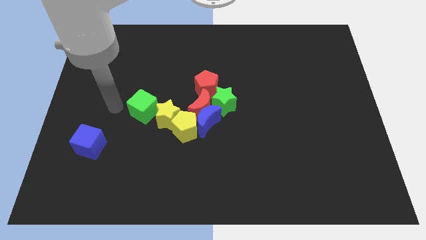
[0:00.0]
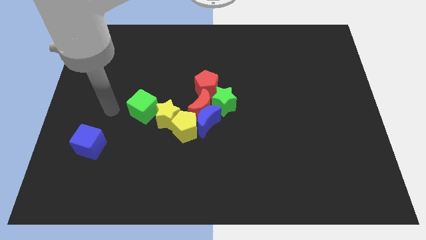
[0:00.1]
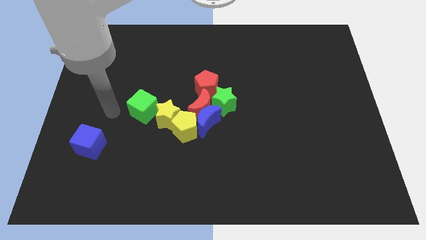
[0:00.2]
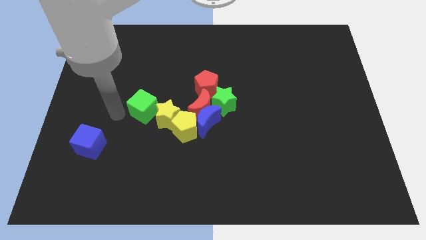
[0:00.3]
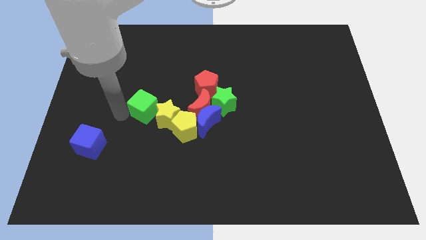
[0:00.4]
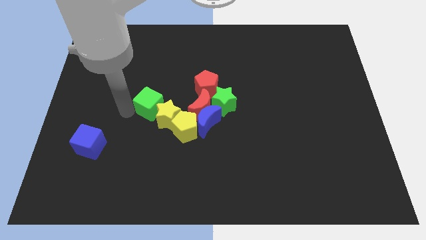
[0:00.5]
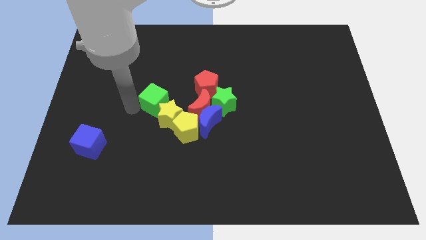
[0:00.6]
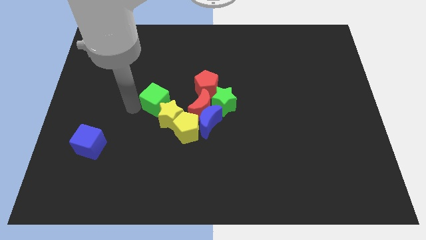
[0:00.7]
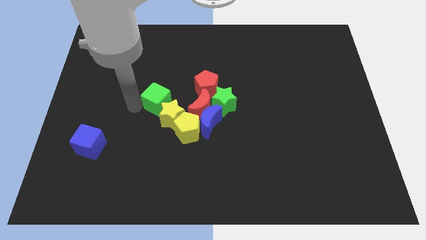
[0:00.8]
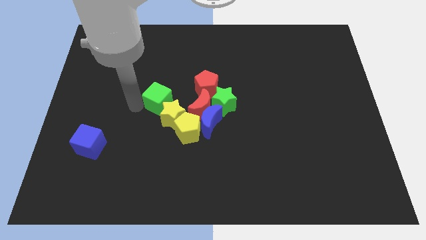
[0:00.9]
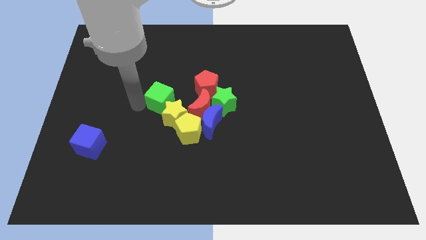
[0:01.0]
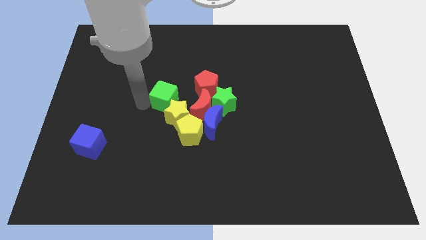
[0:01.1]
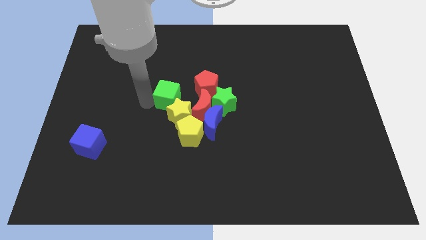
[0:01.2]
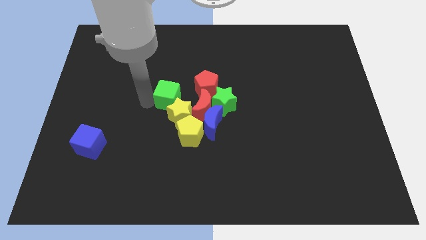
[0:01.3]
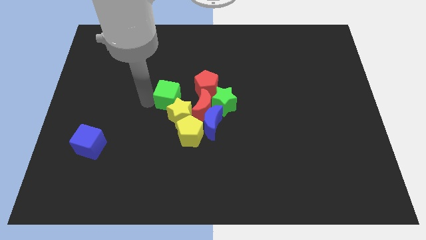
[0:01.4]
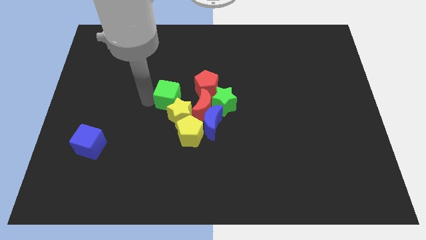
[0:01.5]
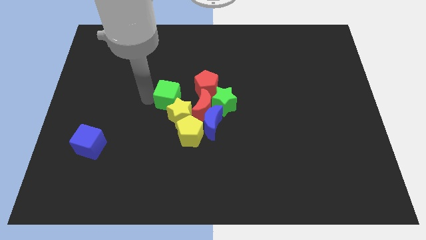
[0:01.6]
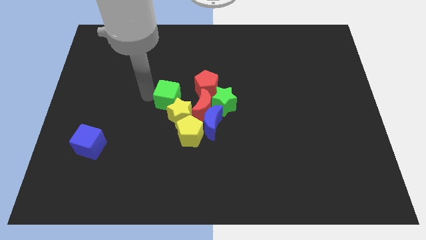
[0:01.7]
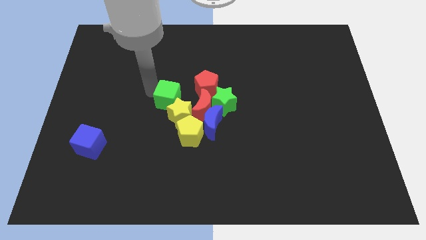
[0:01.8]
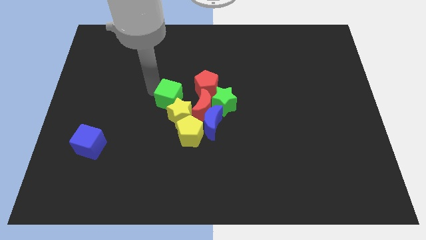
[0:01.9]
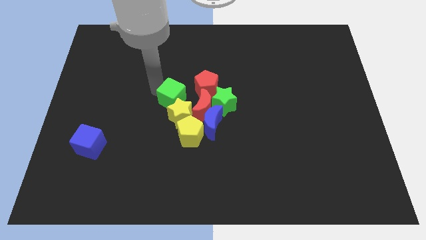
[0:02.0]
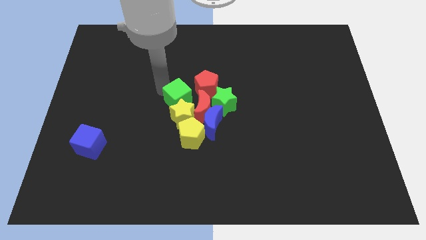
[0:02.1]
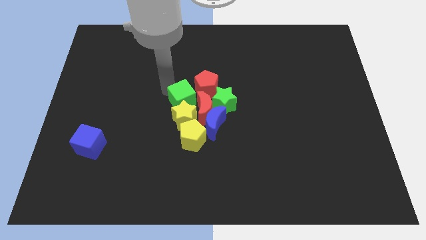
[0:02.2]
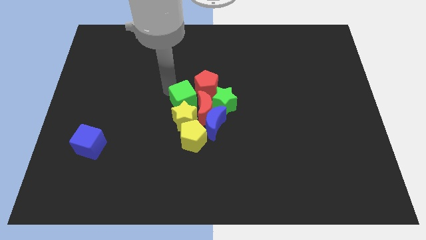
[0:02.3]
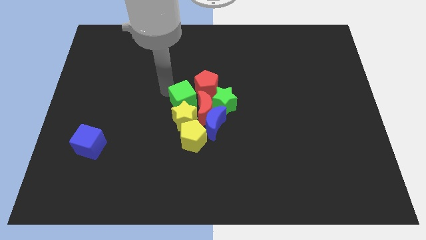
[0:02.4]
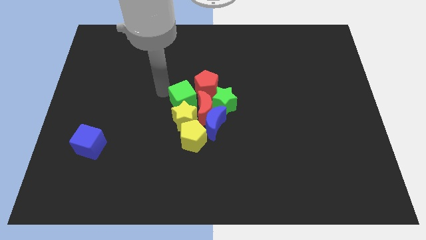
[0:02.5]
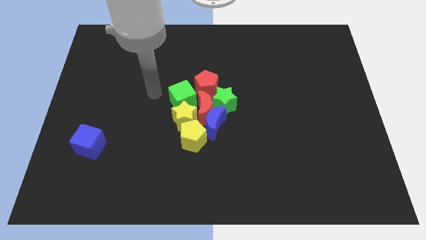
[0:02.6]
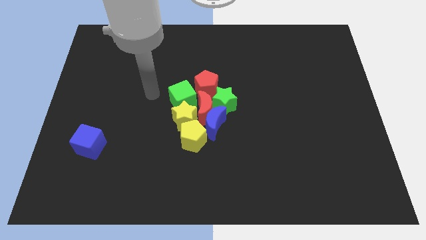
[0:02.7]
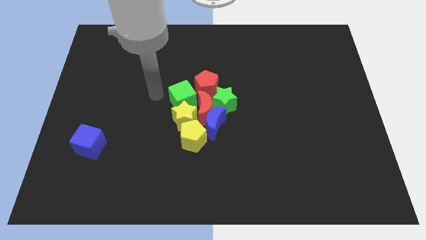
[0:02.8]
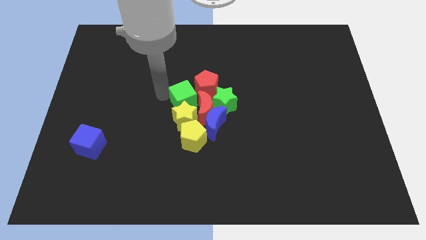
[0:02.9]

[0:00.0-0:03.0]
place the green cube above the yellow star

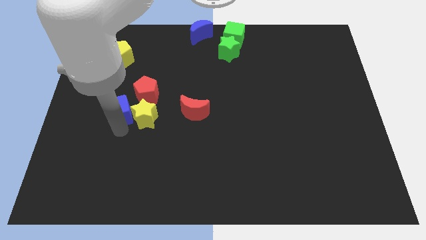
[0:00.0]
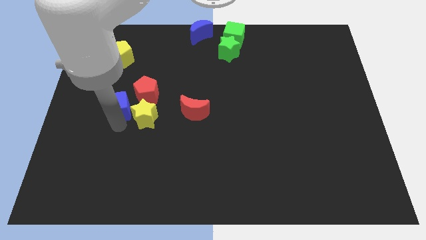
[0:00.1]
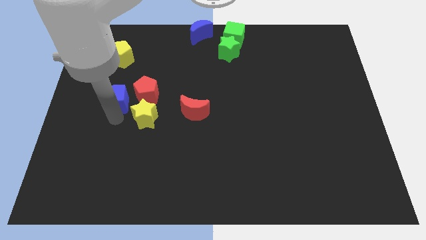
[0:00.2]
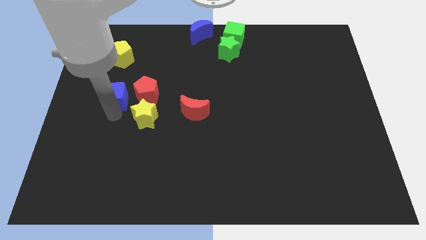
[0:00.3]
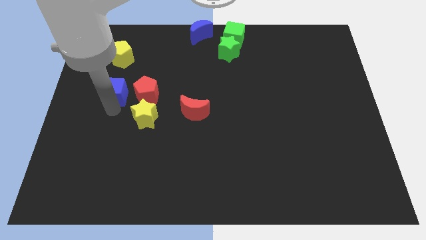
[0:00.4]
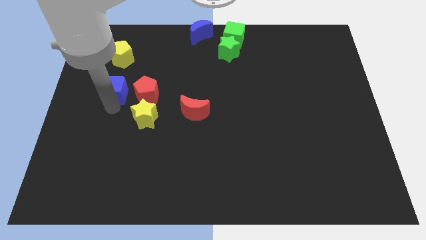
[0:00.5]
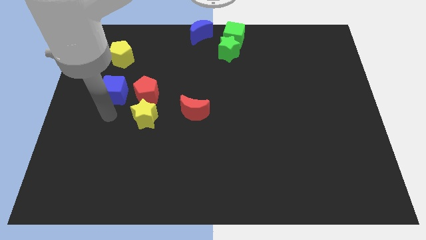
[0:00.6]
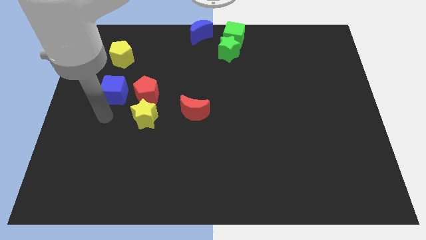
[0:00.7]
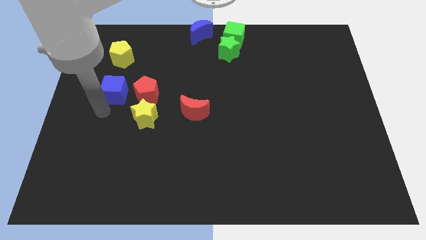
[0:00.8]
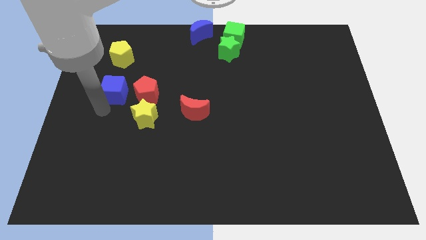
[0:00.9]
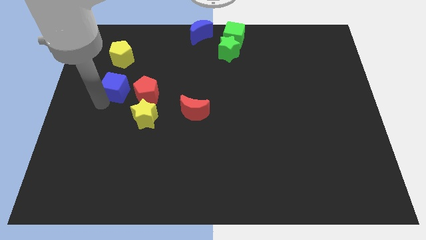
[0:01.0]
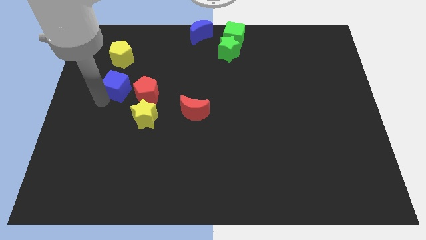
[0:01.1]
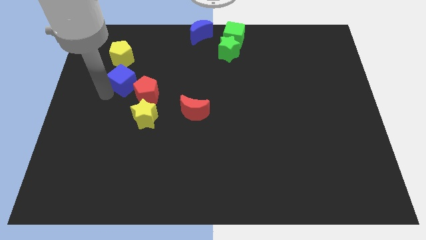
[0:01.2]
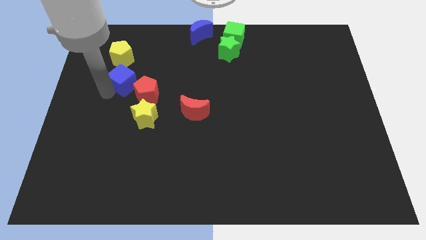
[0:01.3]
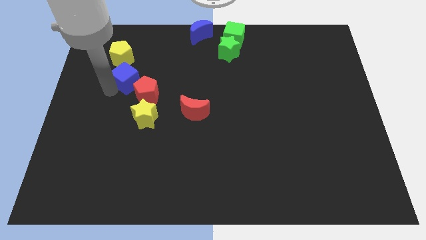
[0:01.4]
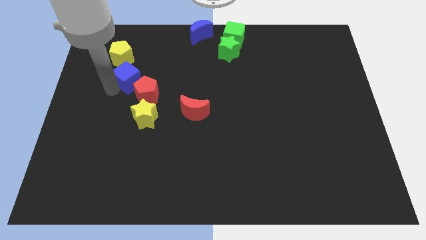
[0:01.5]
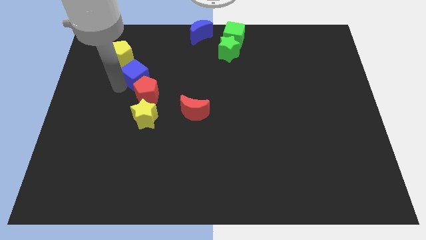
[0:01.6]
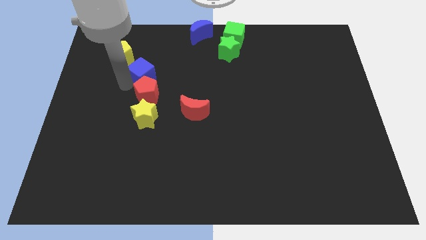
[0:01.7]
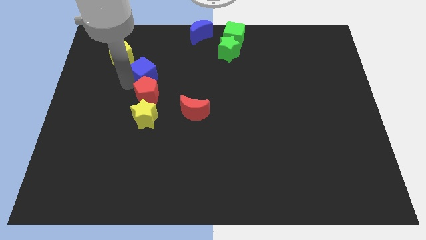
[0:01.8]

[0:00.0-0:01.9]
put the blue cube above the red pentagon

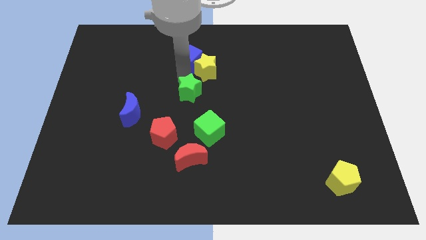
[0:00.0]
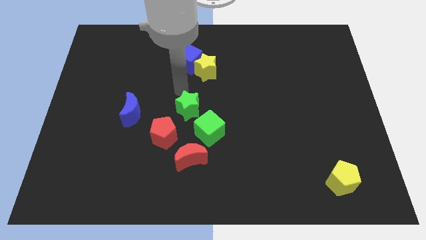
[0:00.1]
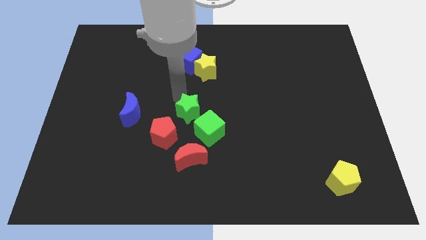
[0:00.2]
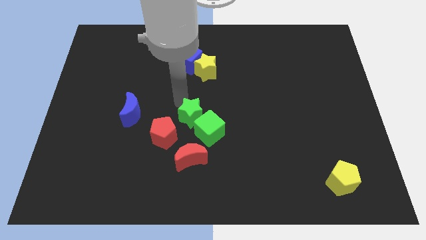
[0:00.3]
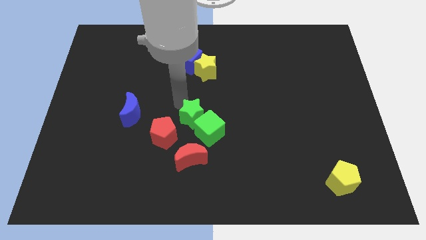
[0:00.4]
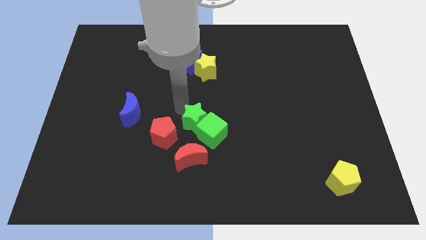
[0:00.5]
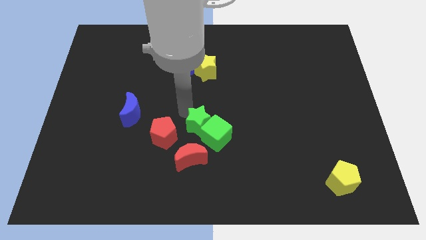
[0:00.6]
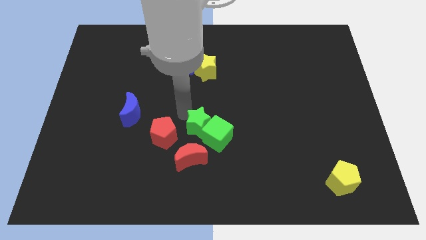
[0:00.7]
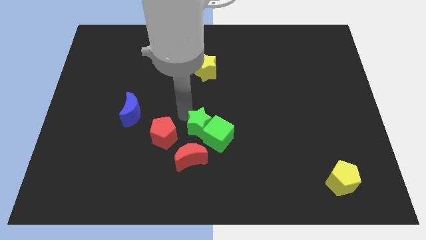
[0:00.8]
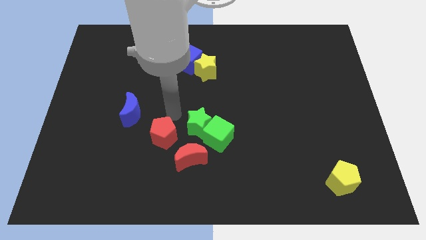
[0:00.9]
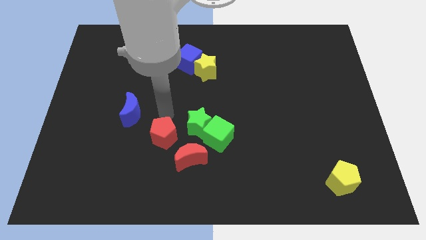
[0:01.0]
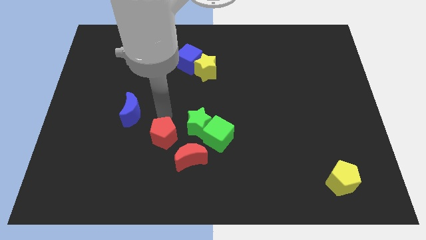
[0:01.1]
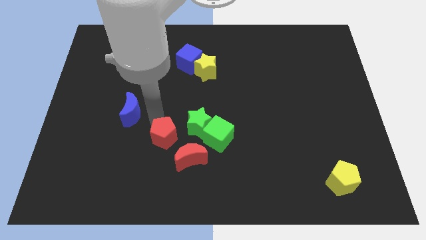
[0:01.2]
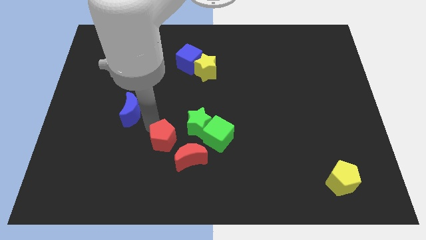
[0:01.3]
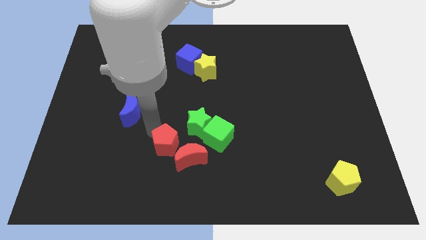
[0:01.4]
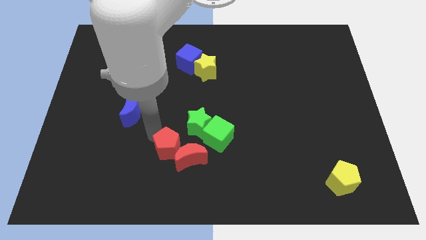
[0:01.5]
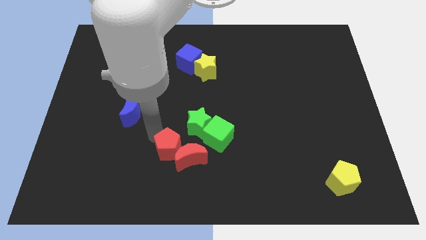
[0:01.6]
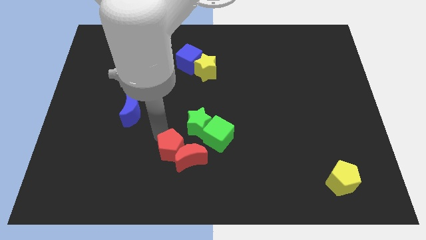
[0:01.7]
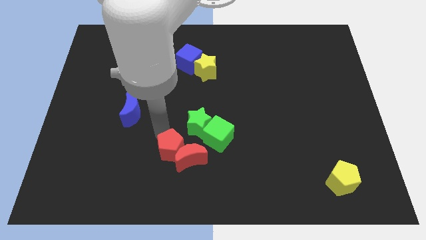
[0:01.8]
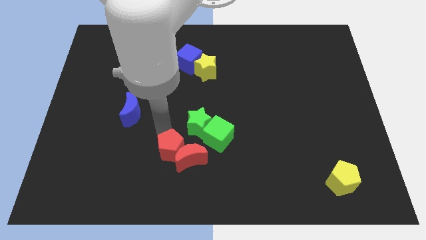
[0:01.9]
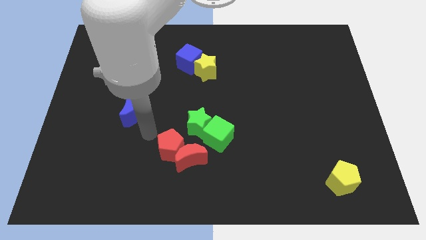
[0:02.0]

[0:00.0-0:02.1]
place the green and red blocks together

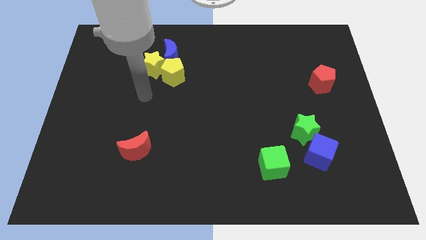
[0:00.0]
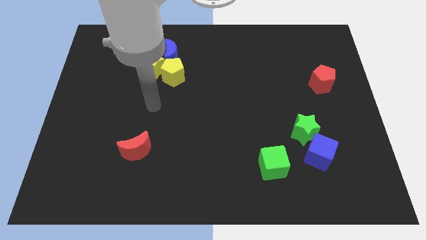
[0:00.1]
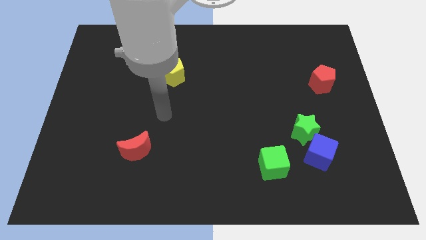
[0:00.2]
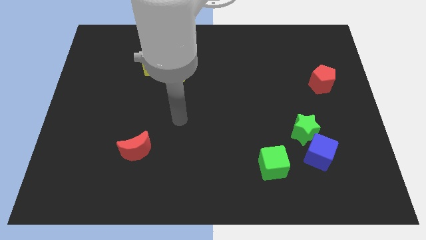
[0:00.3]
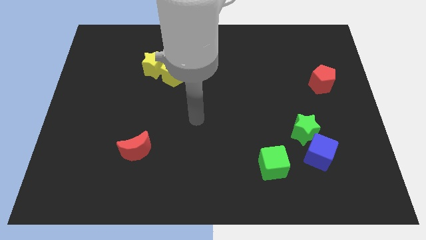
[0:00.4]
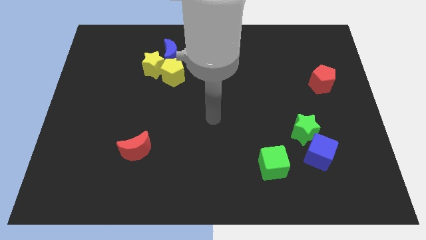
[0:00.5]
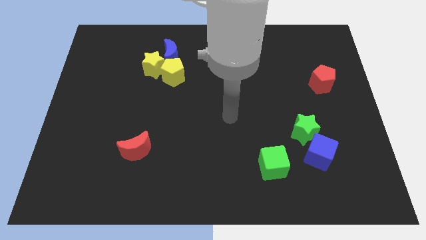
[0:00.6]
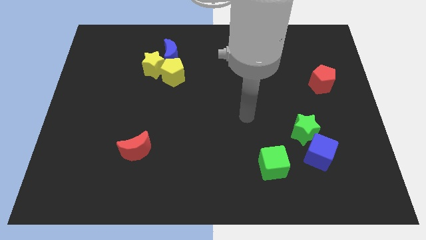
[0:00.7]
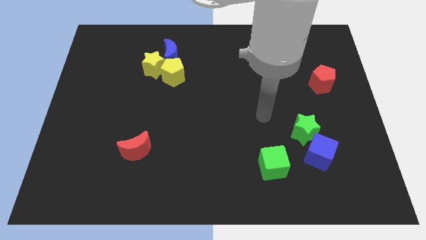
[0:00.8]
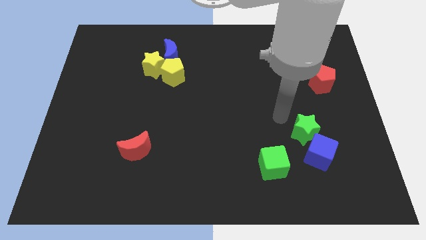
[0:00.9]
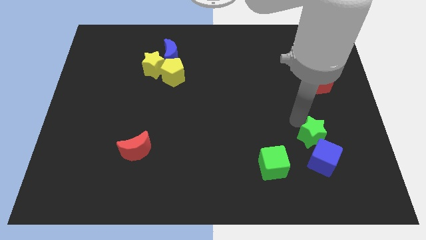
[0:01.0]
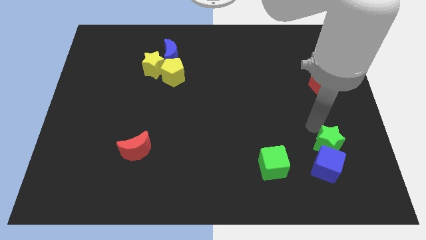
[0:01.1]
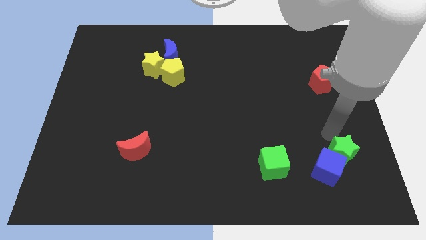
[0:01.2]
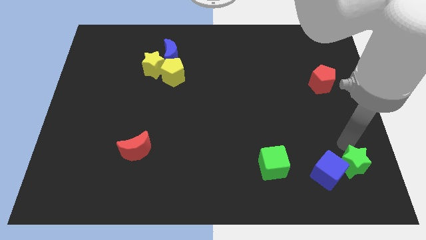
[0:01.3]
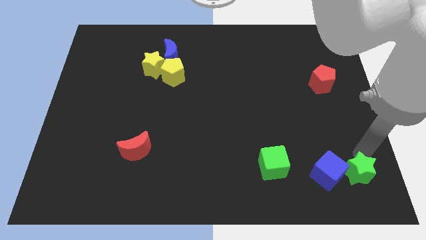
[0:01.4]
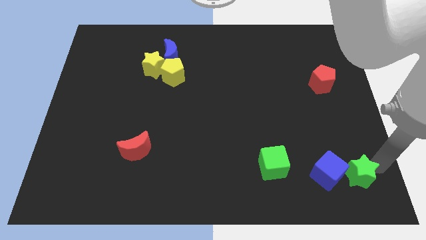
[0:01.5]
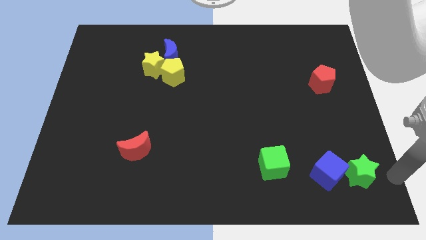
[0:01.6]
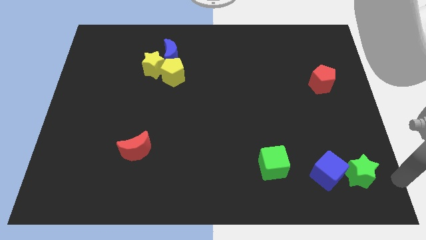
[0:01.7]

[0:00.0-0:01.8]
move the green star right to the blue cube
